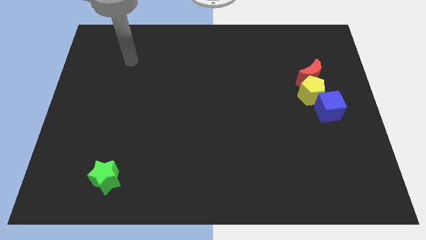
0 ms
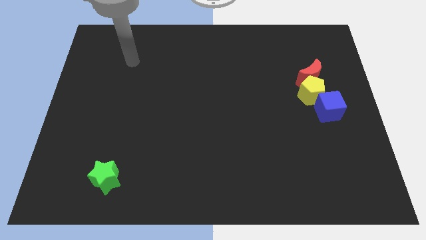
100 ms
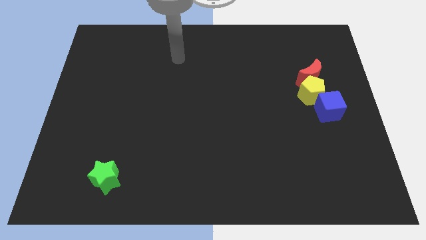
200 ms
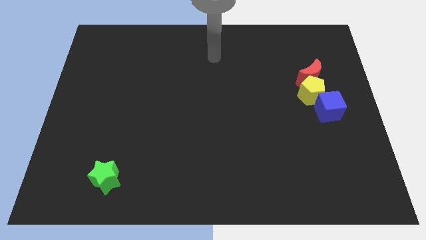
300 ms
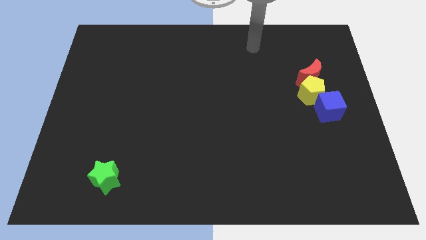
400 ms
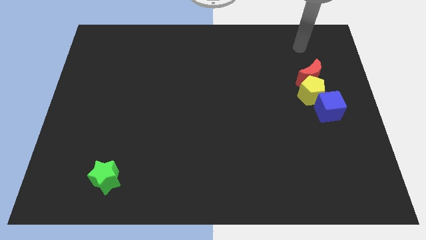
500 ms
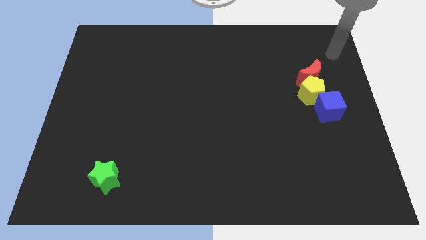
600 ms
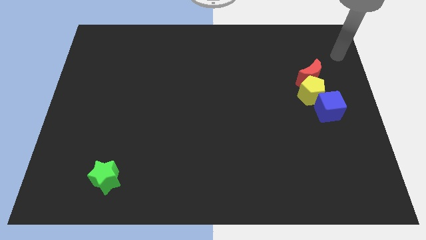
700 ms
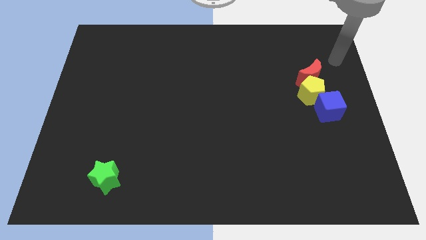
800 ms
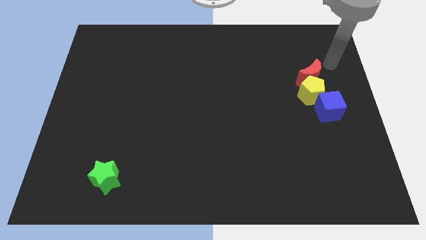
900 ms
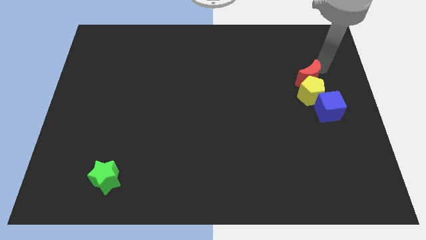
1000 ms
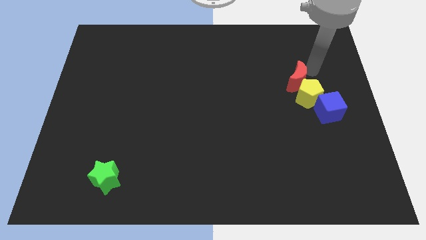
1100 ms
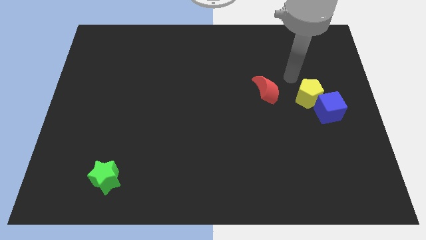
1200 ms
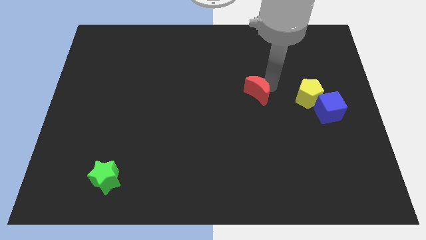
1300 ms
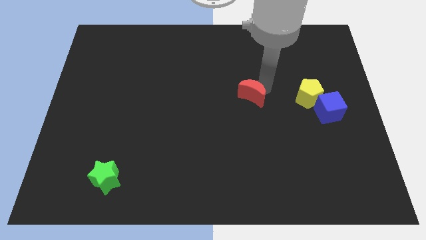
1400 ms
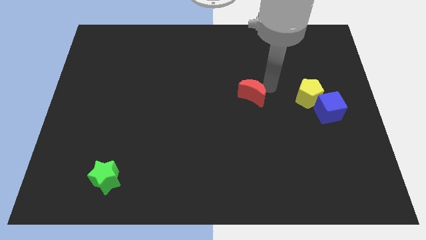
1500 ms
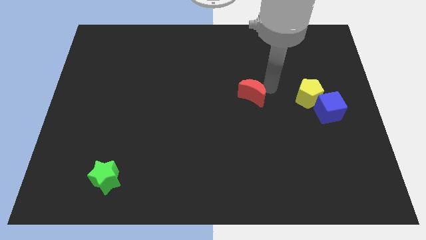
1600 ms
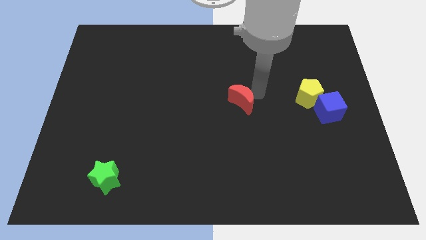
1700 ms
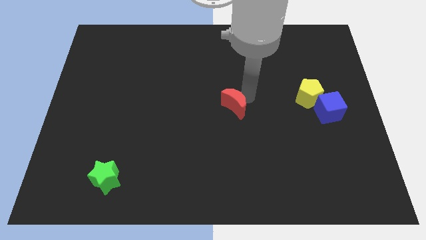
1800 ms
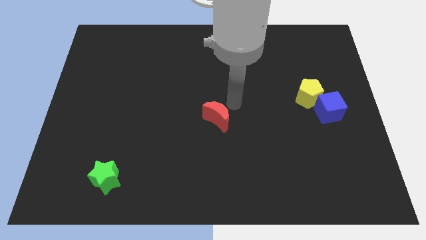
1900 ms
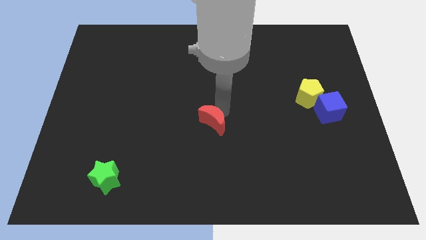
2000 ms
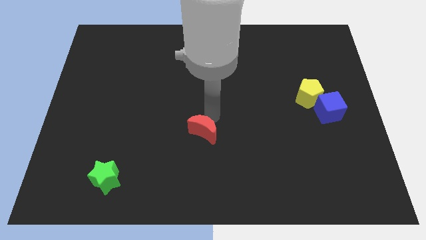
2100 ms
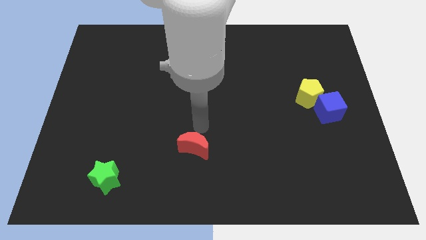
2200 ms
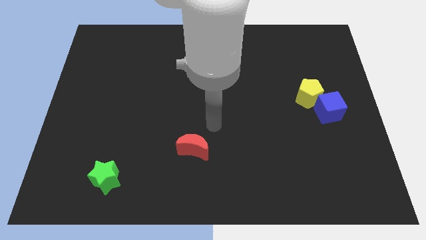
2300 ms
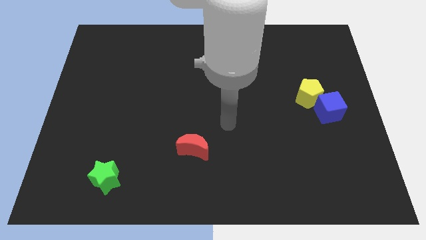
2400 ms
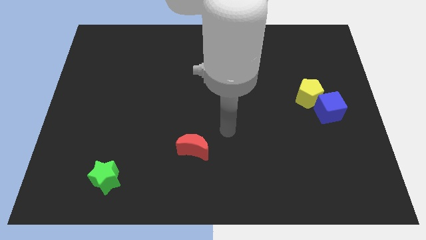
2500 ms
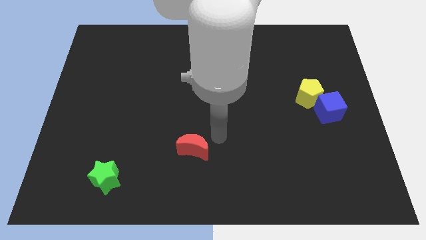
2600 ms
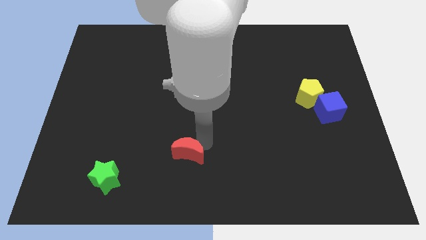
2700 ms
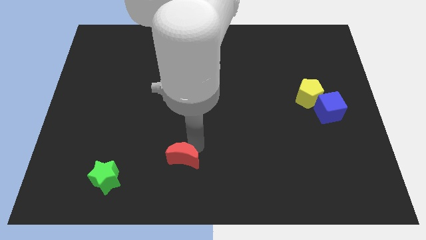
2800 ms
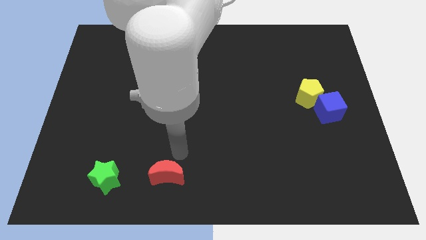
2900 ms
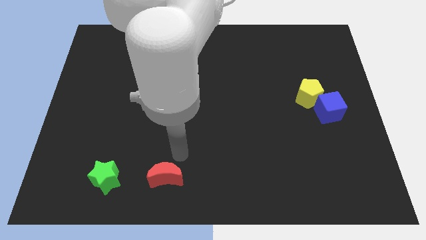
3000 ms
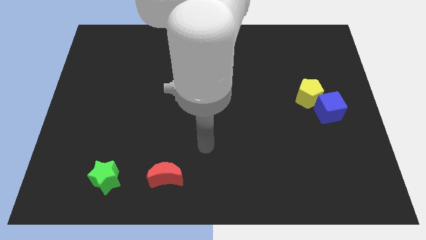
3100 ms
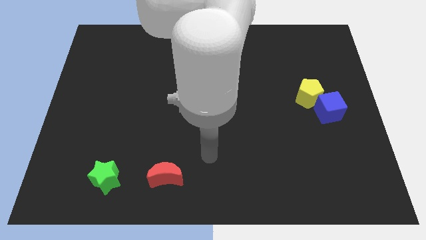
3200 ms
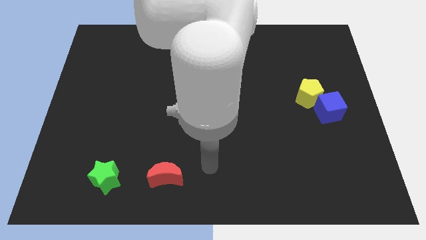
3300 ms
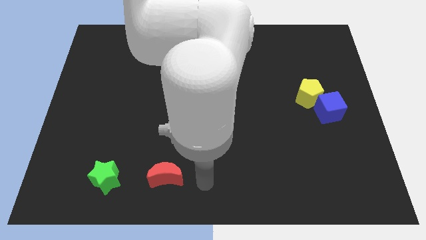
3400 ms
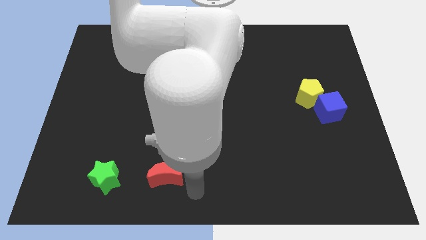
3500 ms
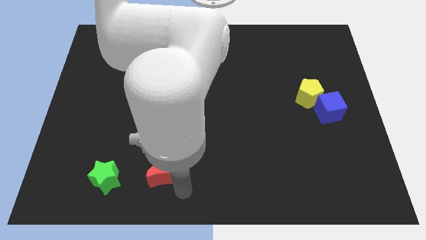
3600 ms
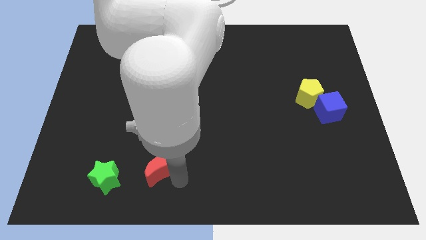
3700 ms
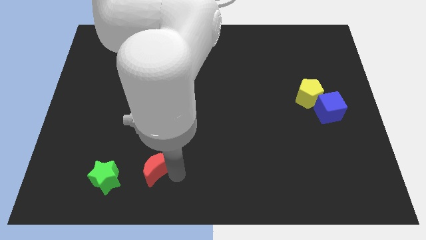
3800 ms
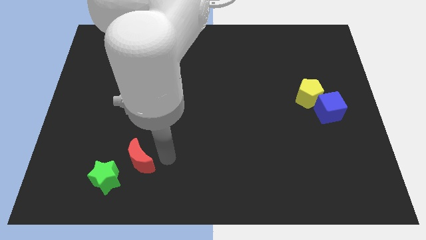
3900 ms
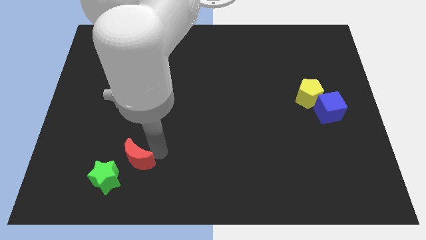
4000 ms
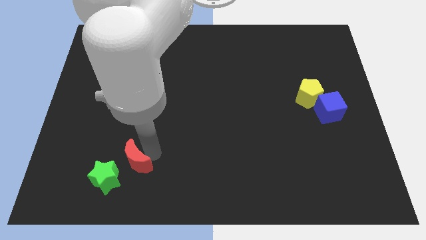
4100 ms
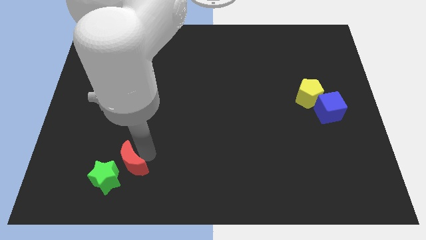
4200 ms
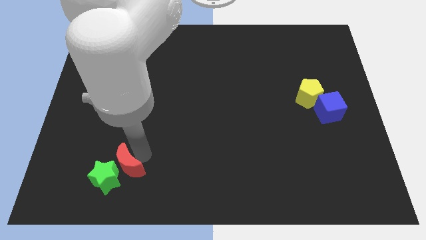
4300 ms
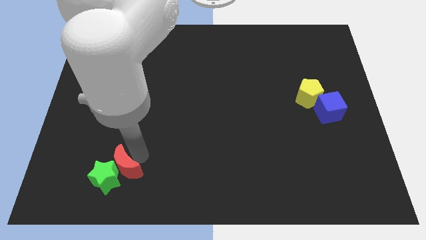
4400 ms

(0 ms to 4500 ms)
put the moon next to the green star

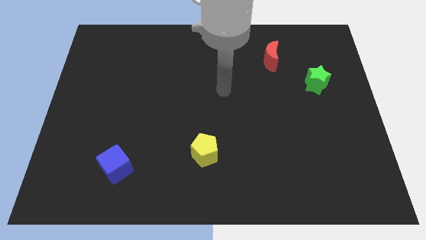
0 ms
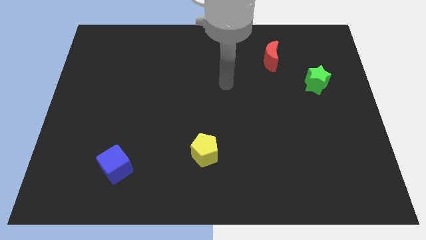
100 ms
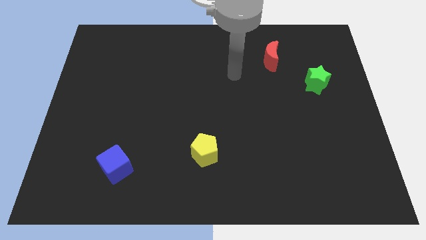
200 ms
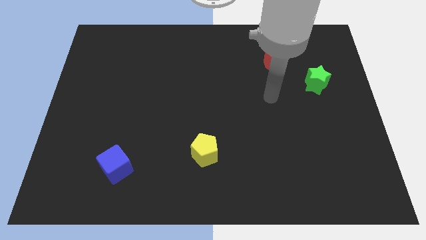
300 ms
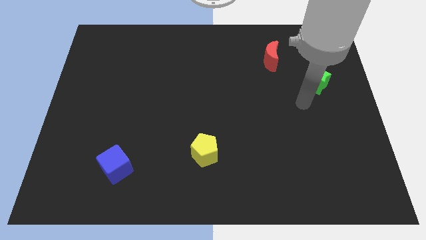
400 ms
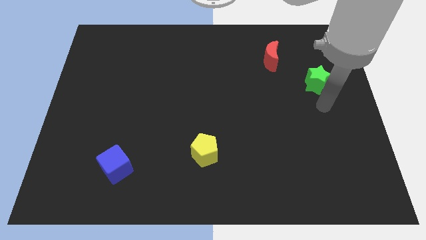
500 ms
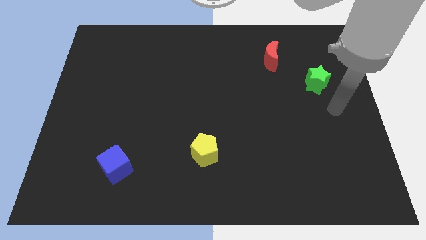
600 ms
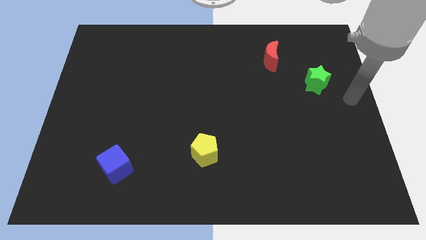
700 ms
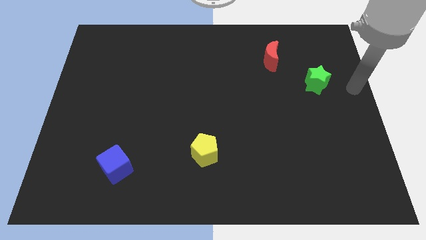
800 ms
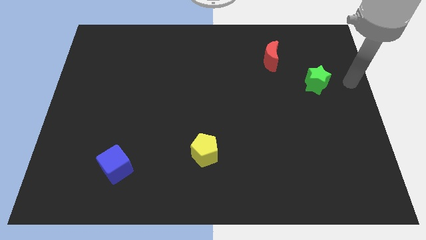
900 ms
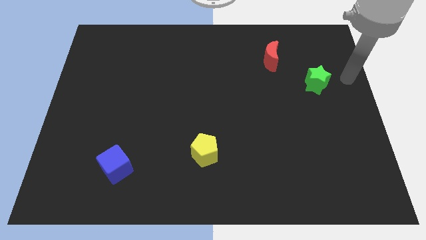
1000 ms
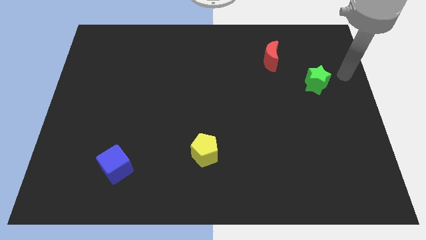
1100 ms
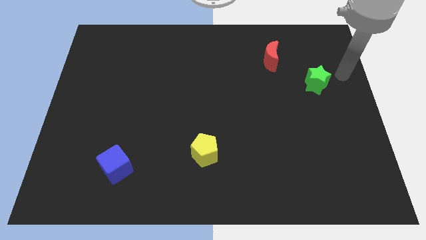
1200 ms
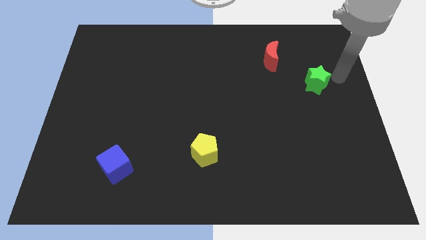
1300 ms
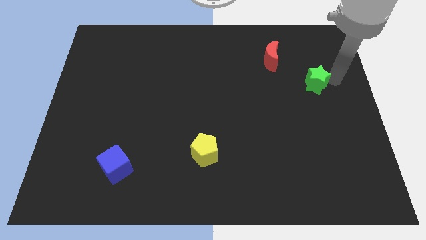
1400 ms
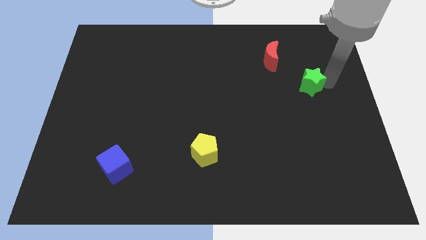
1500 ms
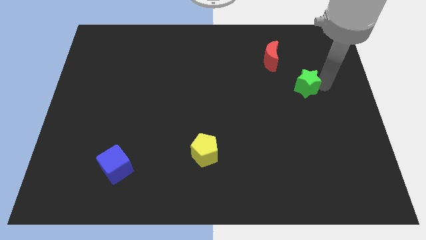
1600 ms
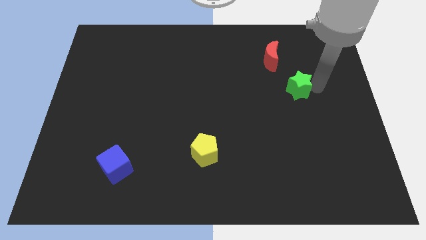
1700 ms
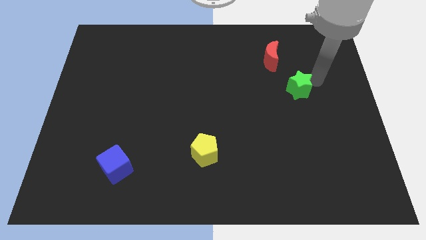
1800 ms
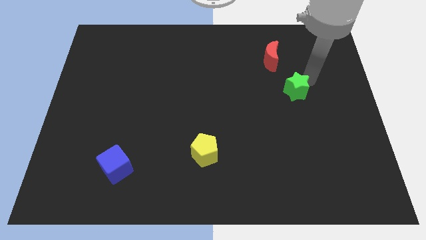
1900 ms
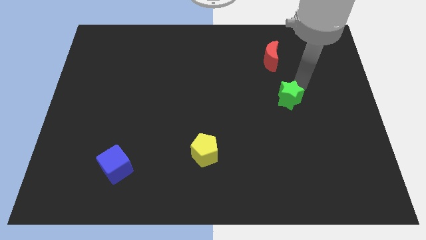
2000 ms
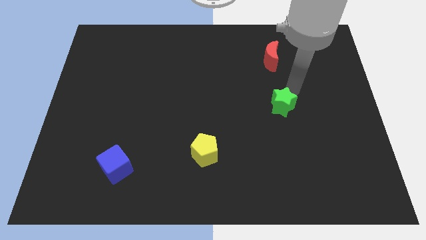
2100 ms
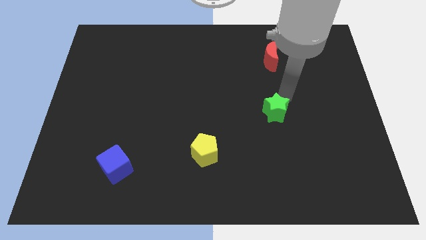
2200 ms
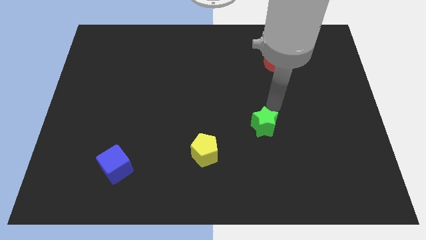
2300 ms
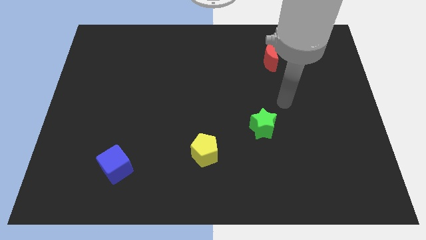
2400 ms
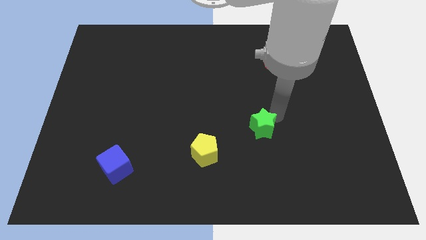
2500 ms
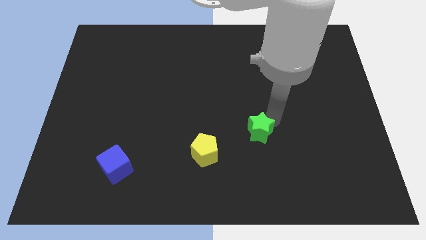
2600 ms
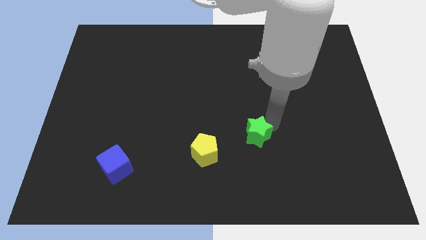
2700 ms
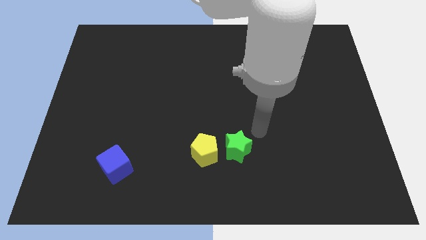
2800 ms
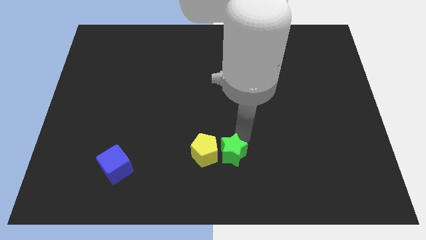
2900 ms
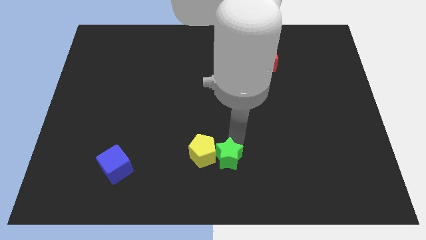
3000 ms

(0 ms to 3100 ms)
move the green star to the yellow block

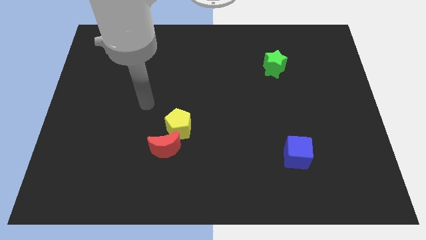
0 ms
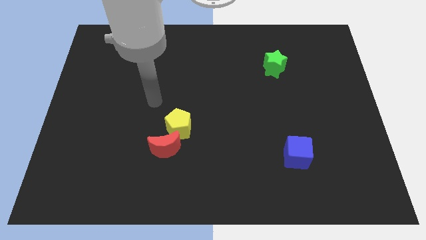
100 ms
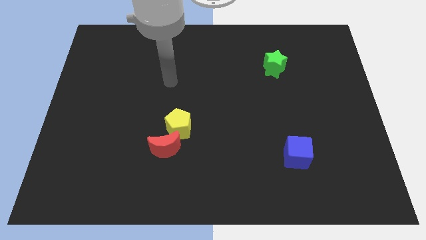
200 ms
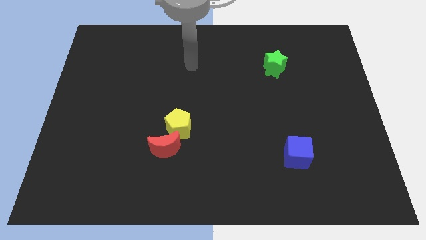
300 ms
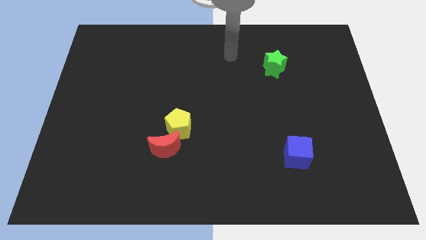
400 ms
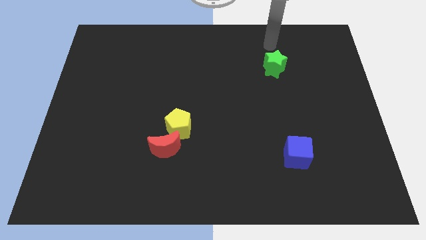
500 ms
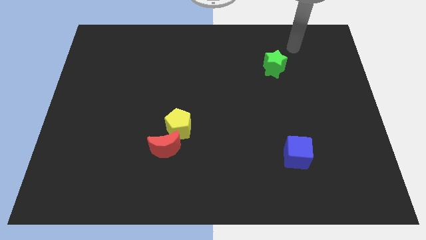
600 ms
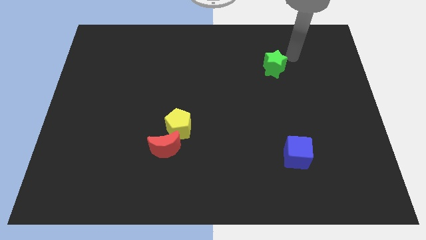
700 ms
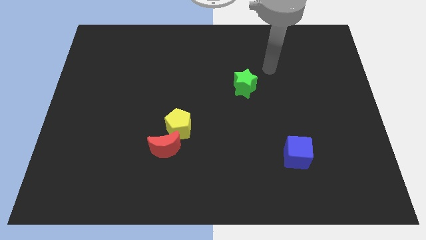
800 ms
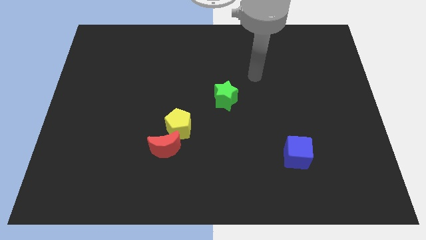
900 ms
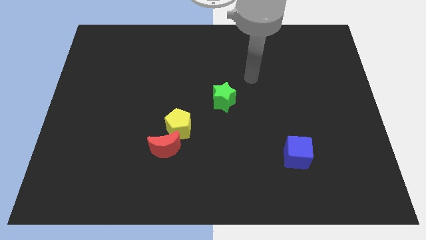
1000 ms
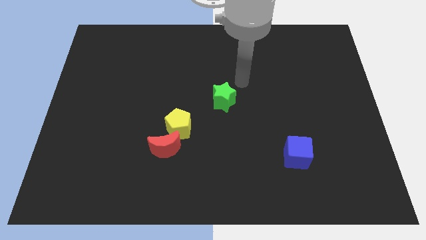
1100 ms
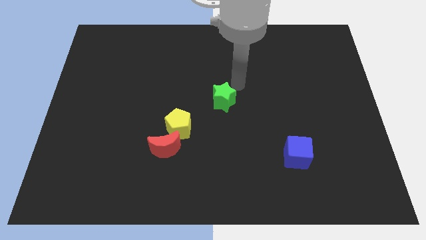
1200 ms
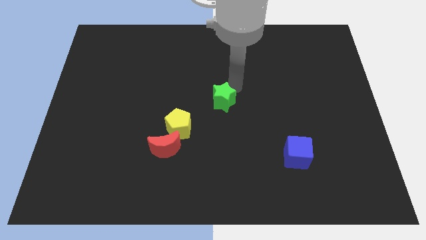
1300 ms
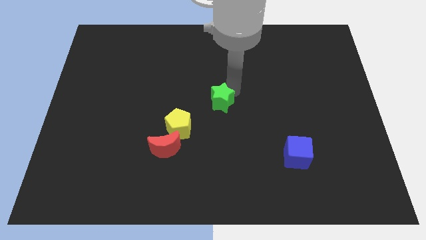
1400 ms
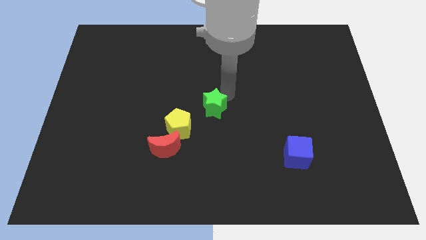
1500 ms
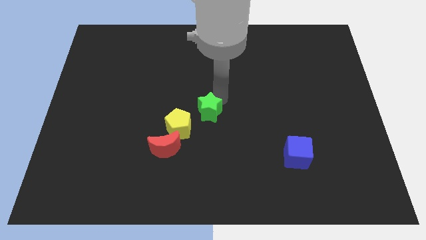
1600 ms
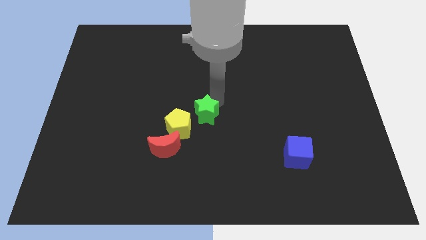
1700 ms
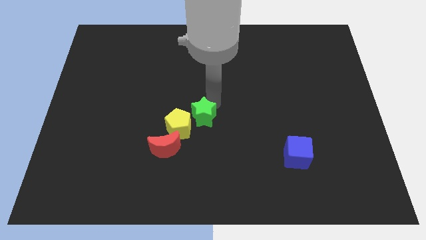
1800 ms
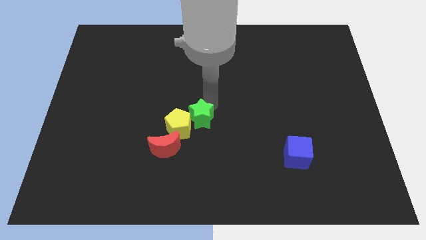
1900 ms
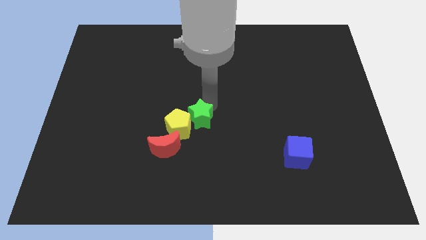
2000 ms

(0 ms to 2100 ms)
slide the star towards the yellow pentagon
